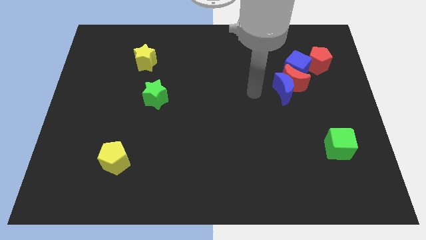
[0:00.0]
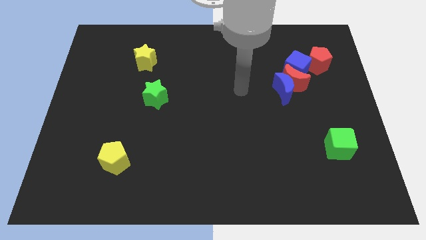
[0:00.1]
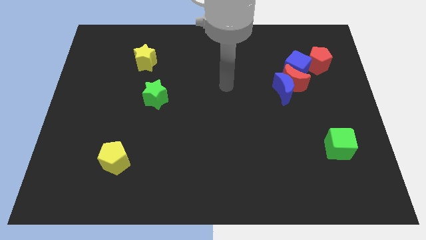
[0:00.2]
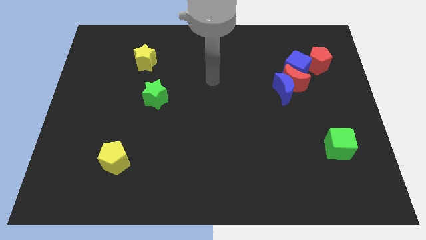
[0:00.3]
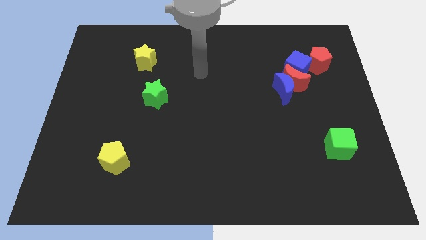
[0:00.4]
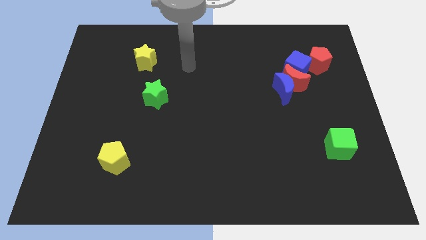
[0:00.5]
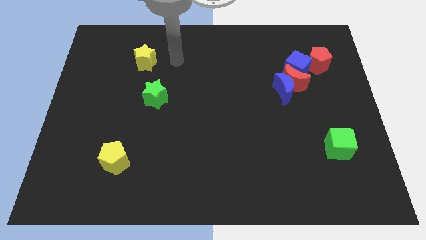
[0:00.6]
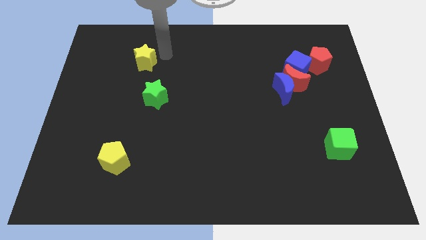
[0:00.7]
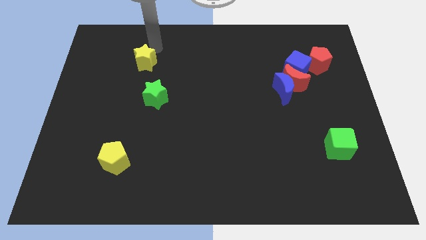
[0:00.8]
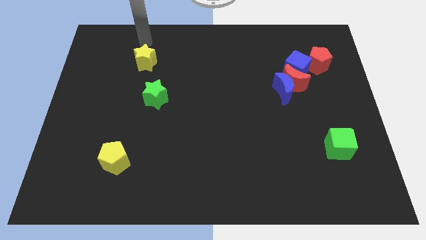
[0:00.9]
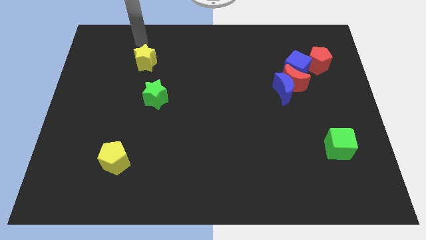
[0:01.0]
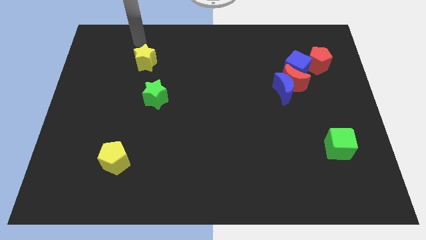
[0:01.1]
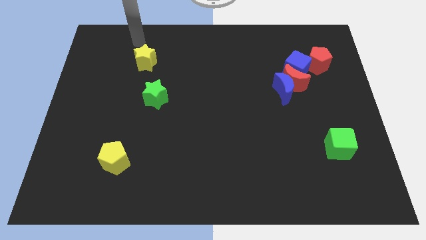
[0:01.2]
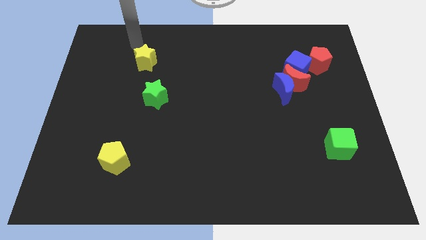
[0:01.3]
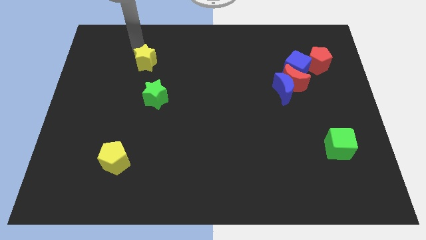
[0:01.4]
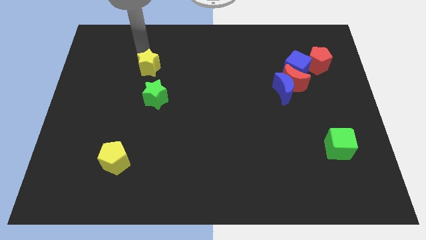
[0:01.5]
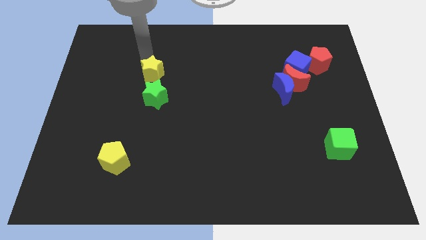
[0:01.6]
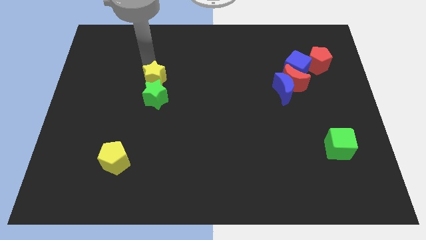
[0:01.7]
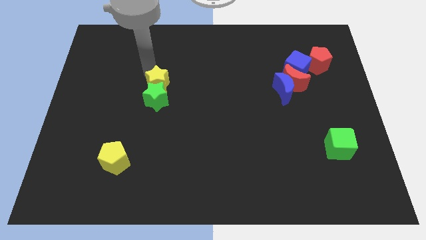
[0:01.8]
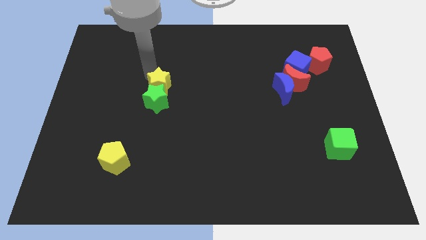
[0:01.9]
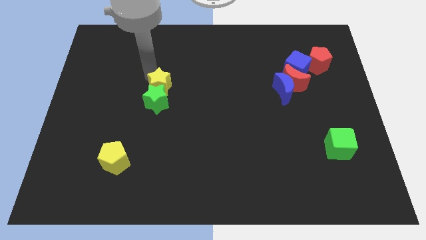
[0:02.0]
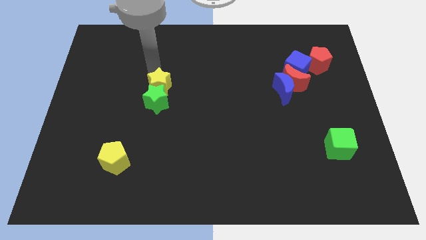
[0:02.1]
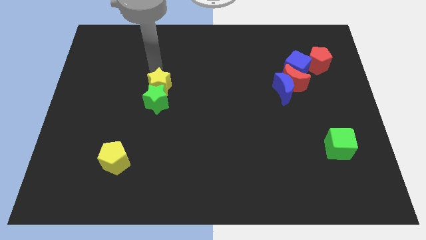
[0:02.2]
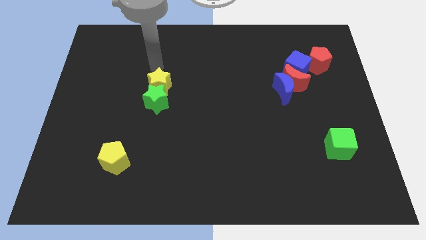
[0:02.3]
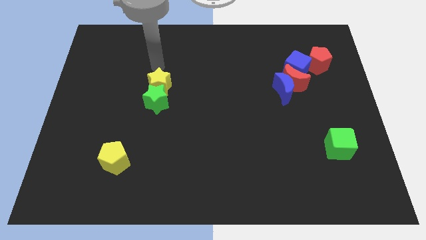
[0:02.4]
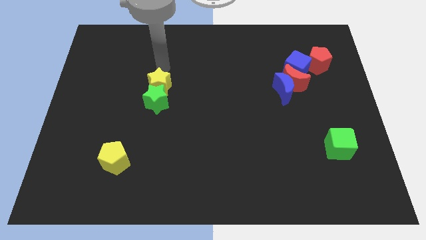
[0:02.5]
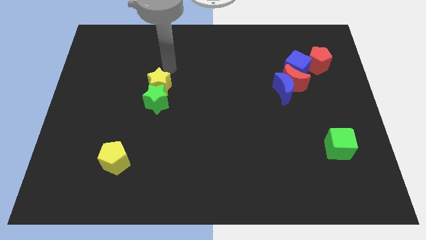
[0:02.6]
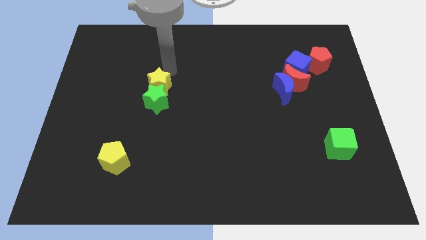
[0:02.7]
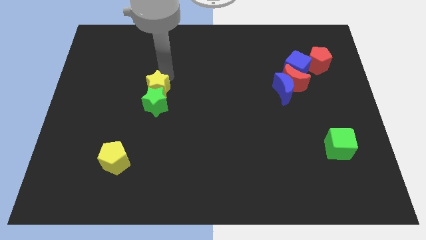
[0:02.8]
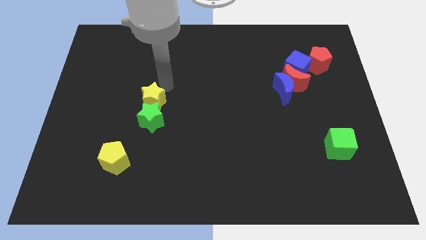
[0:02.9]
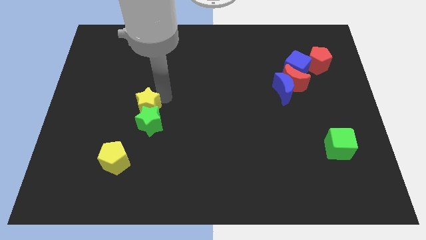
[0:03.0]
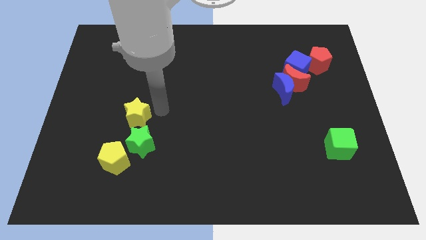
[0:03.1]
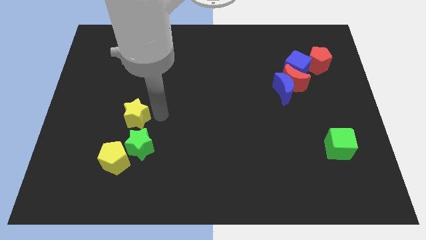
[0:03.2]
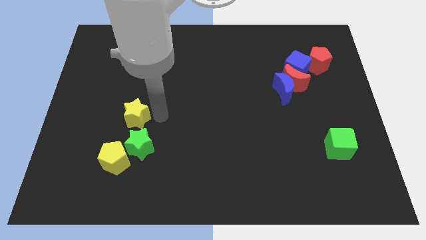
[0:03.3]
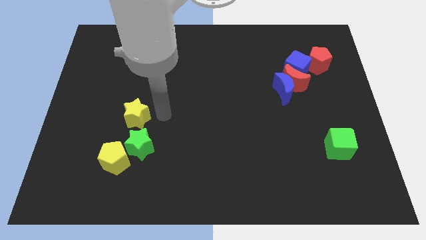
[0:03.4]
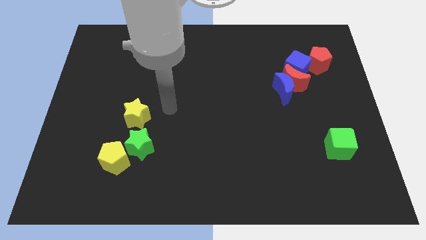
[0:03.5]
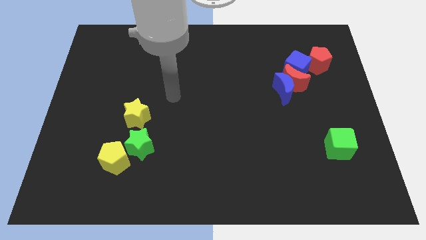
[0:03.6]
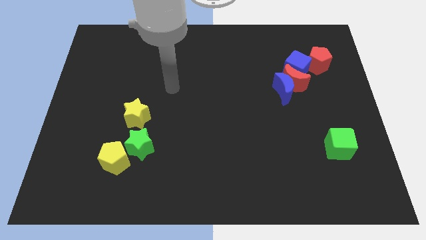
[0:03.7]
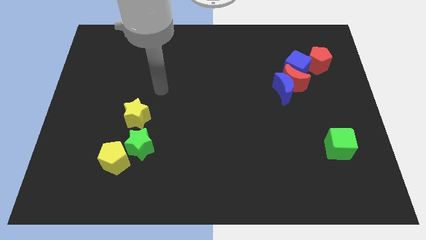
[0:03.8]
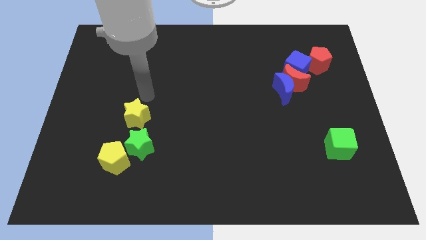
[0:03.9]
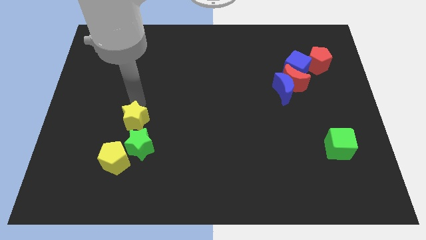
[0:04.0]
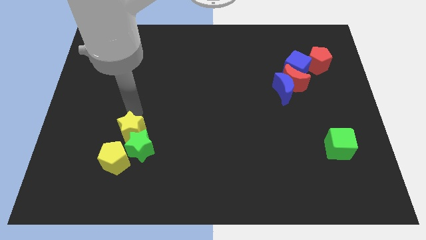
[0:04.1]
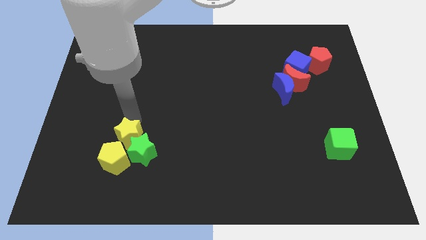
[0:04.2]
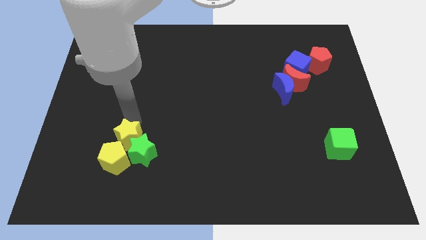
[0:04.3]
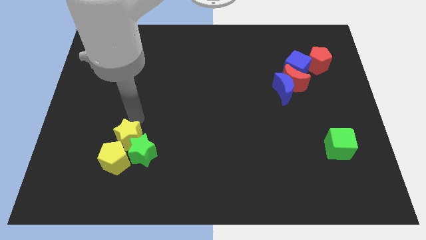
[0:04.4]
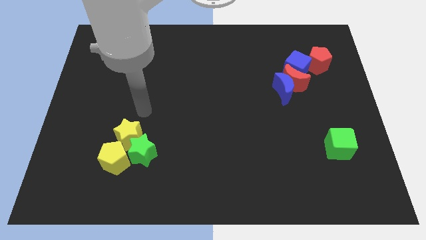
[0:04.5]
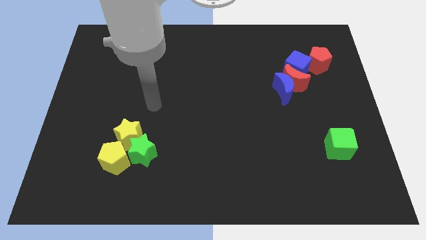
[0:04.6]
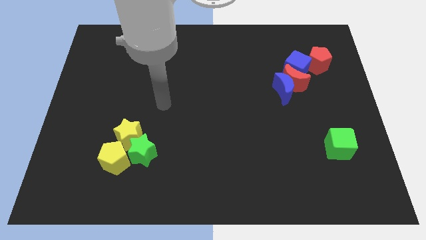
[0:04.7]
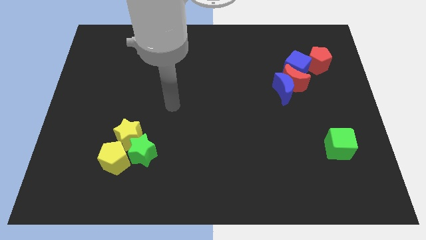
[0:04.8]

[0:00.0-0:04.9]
push the yellow star and green star into the yellow pentagon

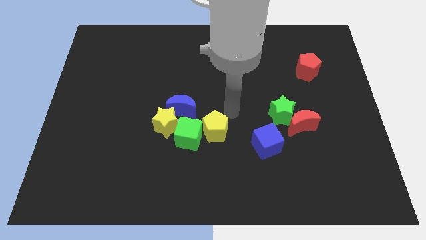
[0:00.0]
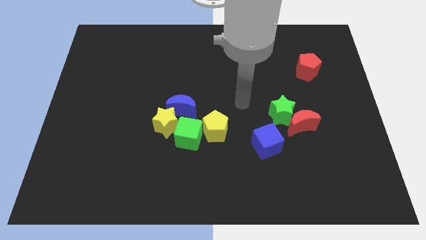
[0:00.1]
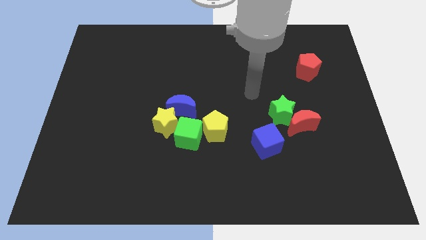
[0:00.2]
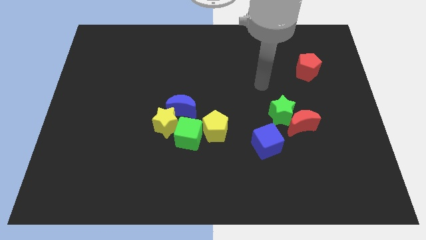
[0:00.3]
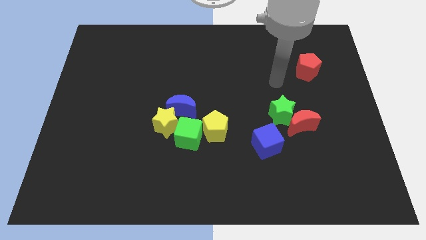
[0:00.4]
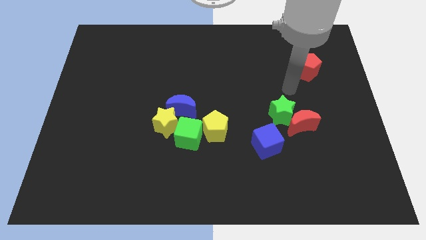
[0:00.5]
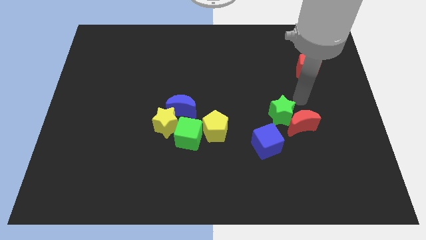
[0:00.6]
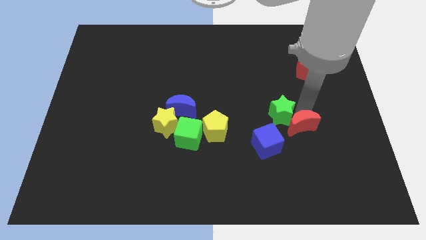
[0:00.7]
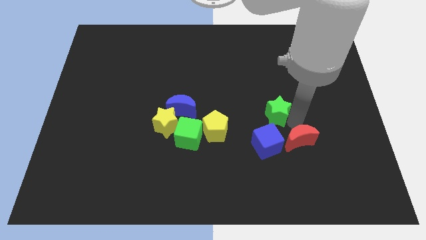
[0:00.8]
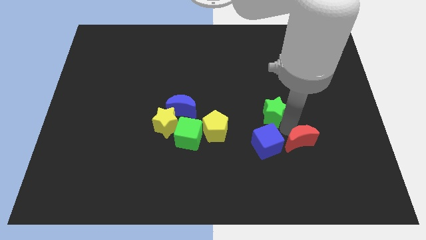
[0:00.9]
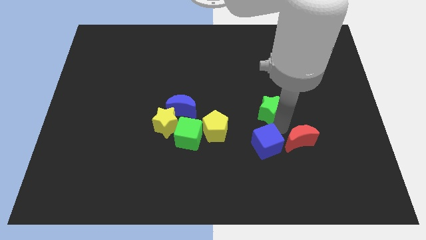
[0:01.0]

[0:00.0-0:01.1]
separate red crescent and green star

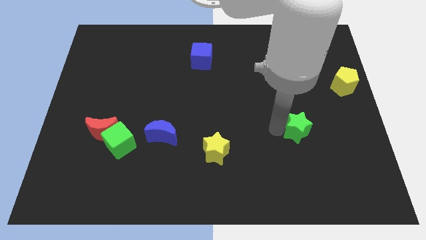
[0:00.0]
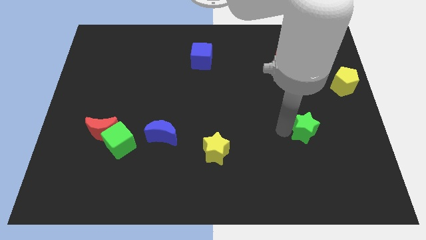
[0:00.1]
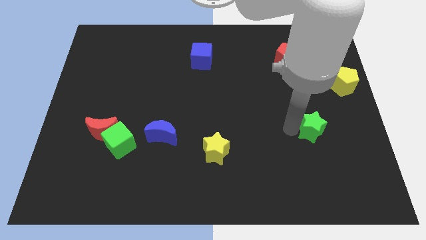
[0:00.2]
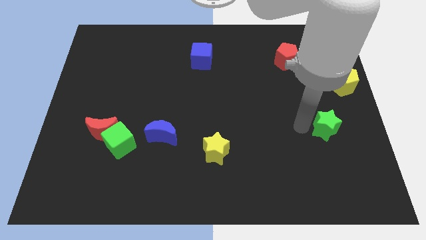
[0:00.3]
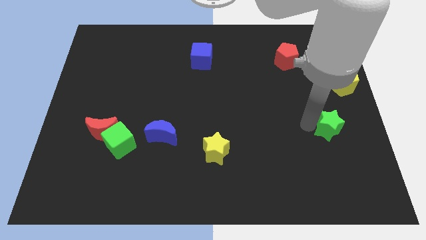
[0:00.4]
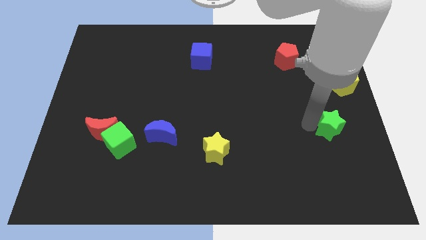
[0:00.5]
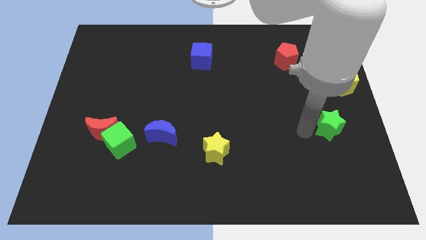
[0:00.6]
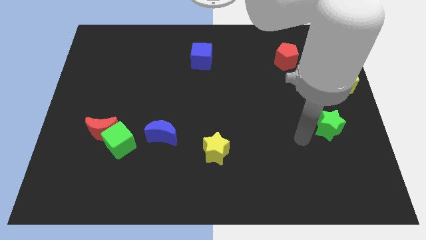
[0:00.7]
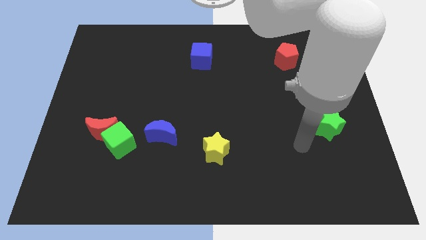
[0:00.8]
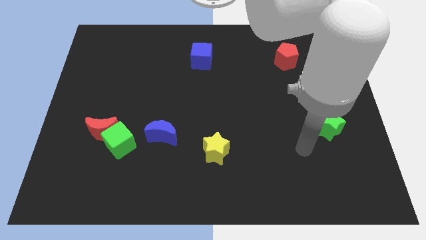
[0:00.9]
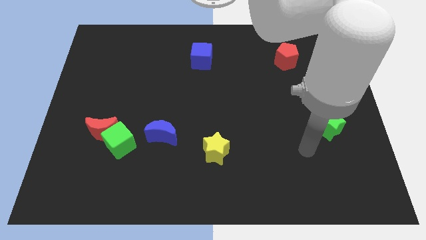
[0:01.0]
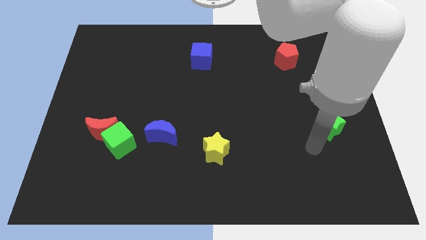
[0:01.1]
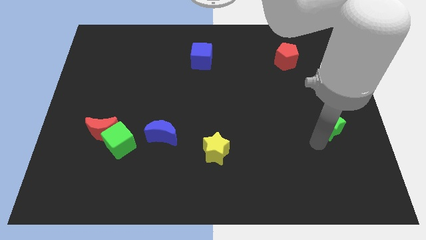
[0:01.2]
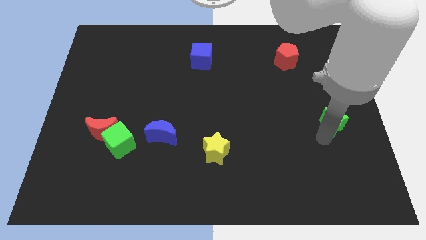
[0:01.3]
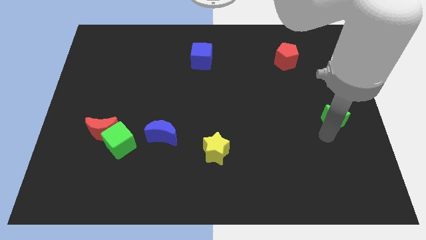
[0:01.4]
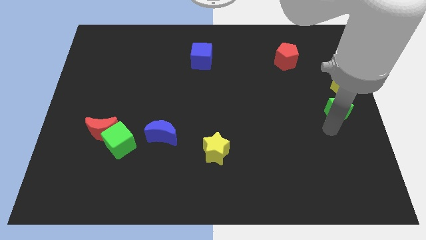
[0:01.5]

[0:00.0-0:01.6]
move the green star diagonally bottom left of the yellow pentagon

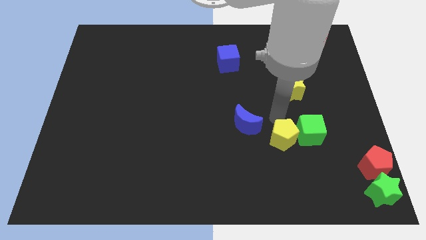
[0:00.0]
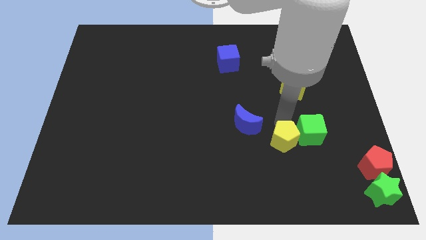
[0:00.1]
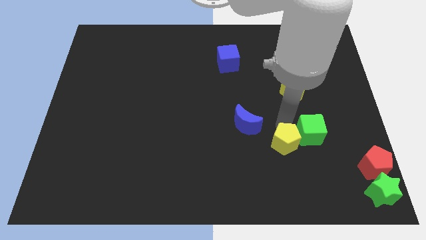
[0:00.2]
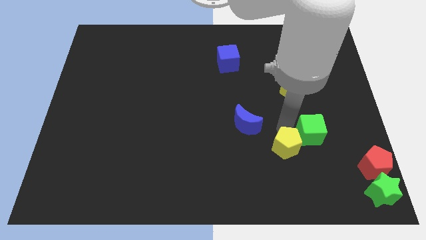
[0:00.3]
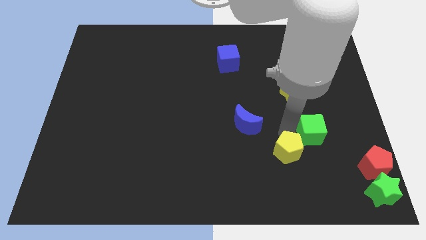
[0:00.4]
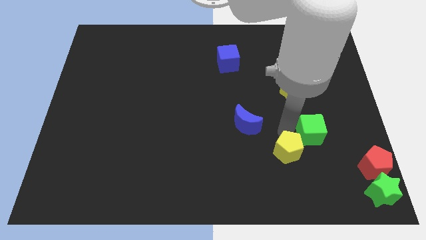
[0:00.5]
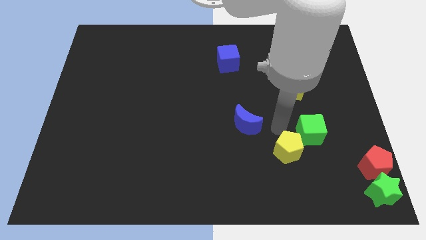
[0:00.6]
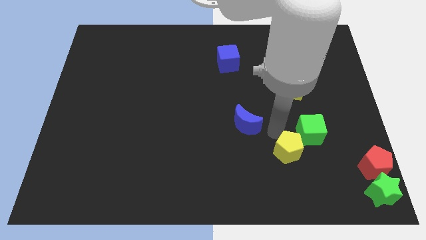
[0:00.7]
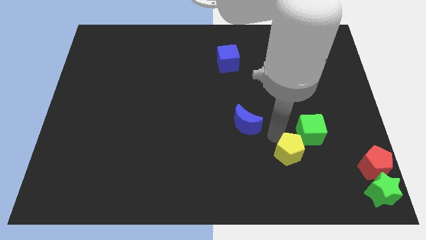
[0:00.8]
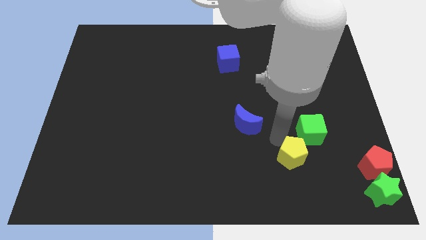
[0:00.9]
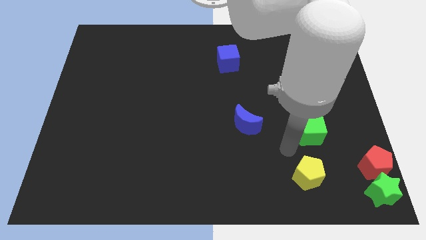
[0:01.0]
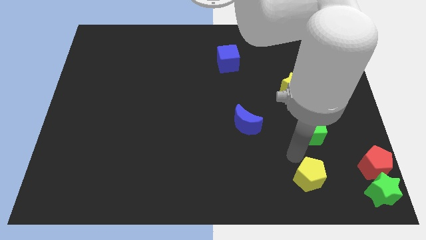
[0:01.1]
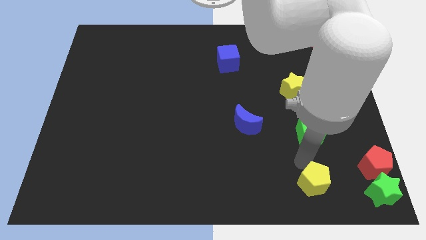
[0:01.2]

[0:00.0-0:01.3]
move the yellow pentagon to the bottom of the green cube
